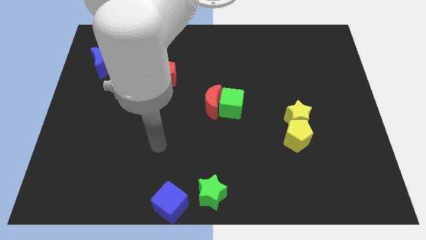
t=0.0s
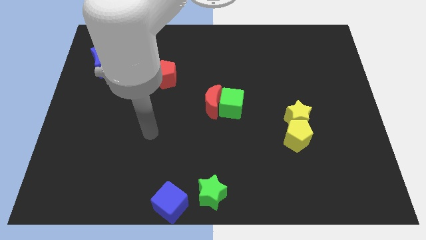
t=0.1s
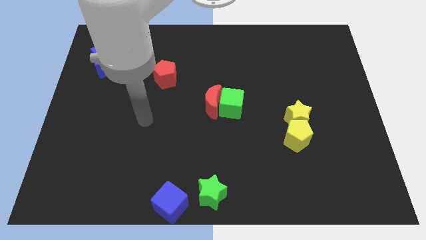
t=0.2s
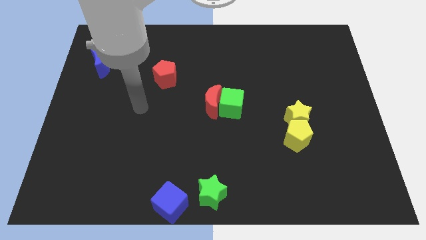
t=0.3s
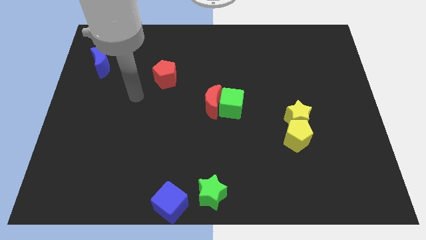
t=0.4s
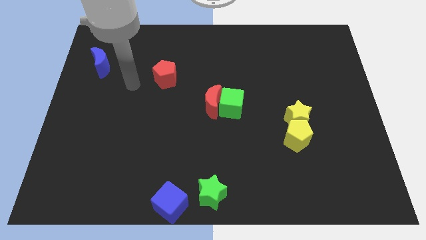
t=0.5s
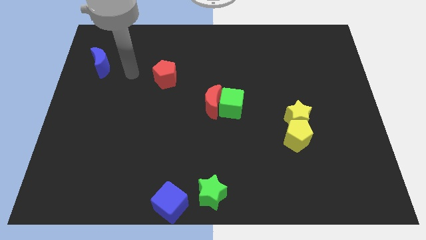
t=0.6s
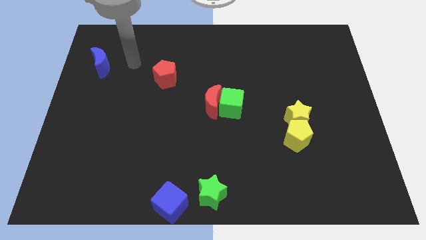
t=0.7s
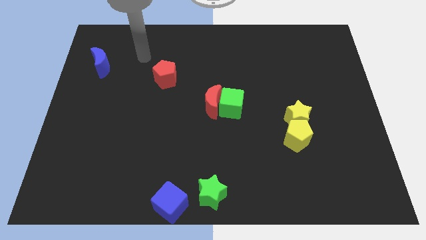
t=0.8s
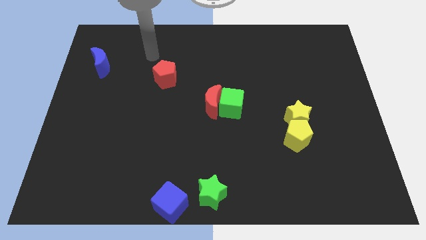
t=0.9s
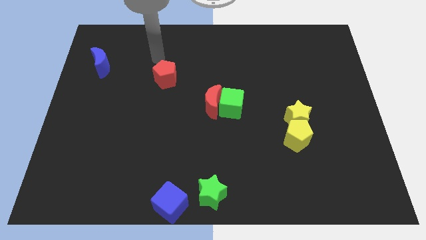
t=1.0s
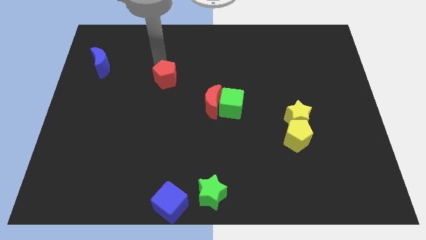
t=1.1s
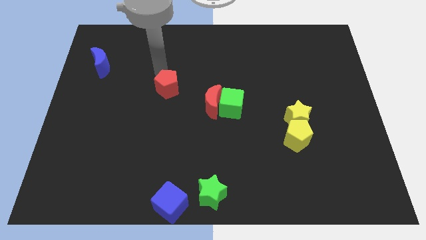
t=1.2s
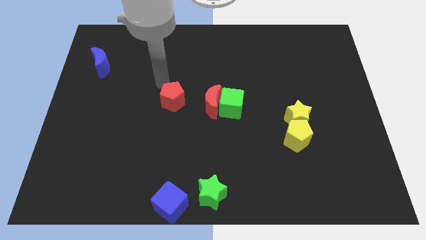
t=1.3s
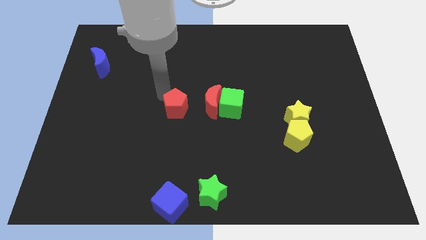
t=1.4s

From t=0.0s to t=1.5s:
move the red pentagon to the left of the red moon

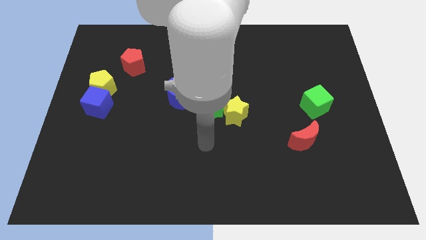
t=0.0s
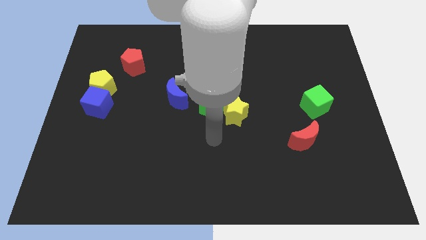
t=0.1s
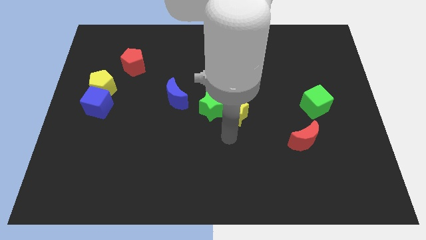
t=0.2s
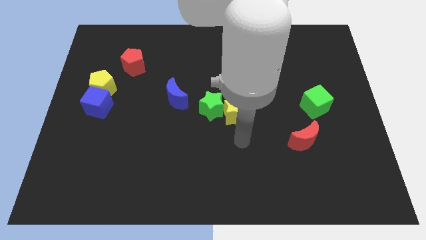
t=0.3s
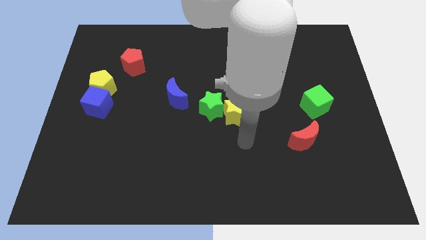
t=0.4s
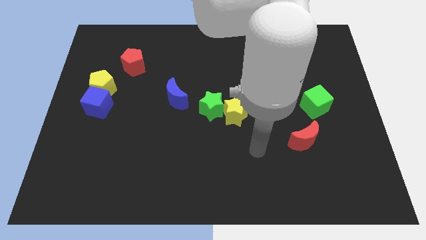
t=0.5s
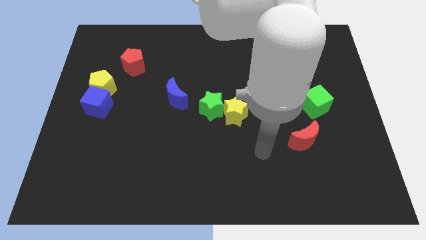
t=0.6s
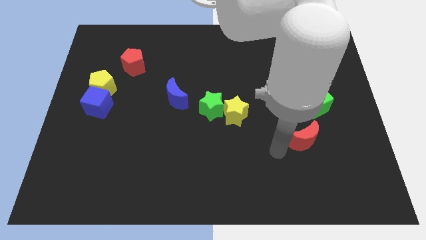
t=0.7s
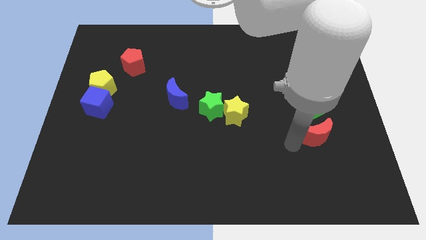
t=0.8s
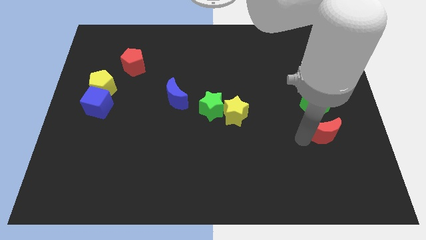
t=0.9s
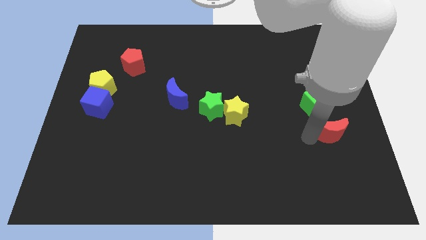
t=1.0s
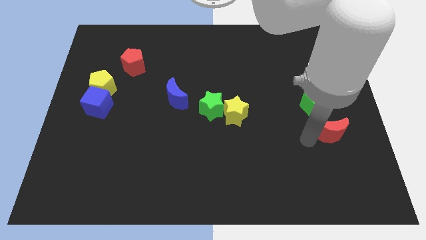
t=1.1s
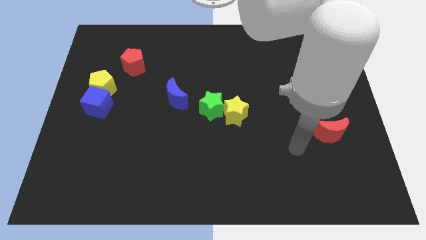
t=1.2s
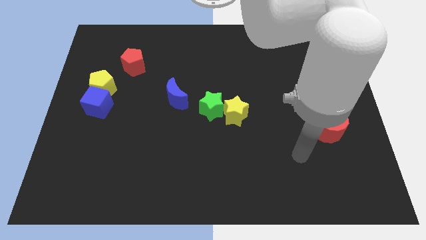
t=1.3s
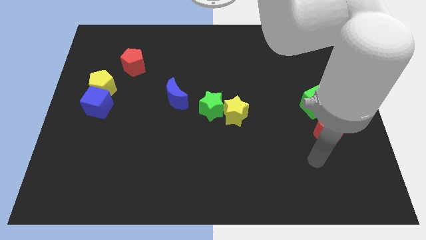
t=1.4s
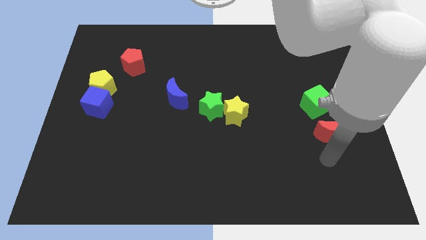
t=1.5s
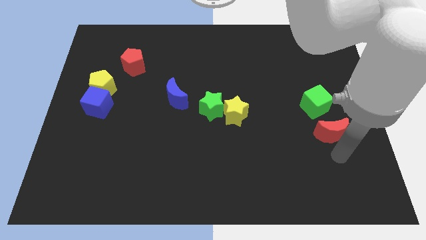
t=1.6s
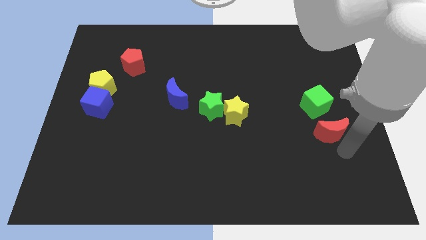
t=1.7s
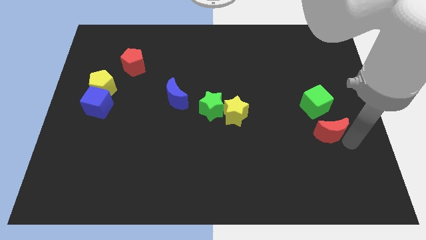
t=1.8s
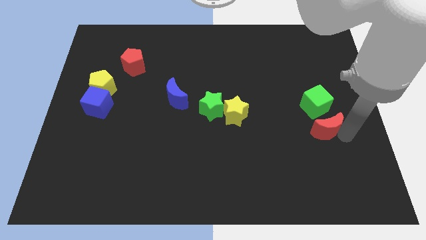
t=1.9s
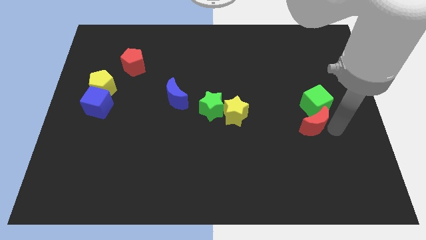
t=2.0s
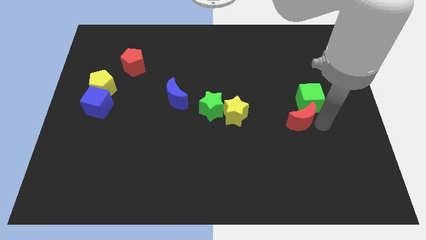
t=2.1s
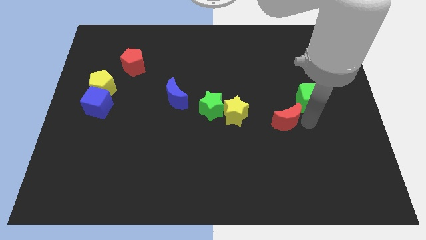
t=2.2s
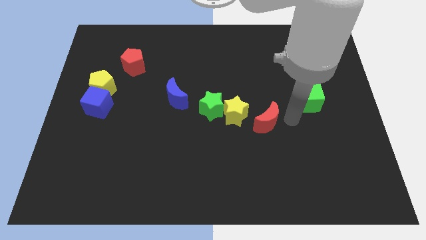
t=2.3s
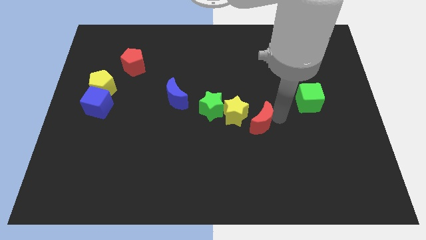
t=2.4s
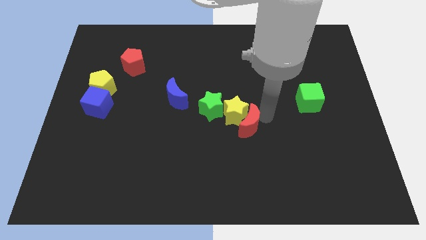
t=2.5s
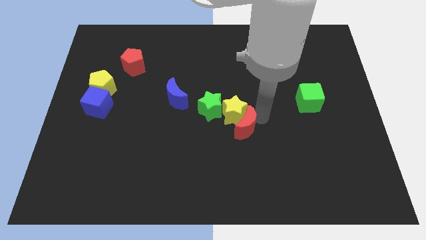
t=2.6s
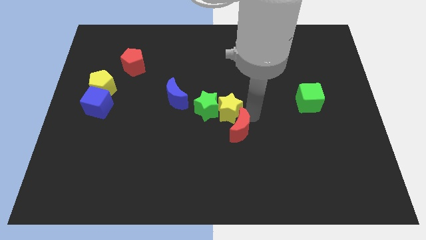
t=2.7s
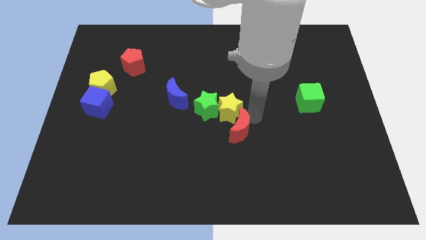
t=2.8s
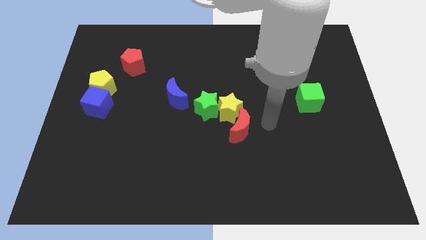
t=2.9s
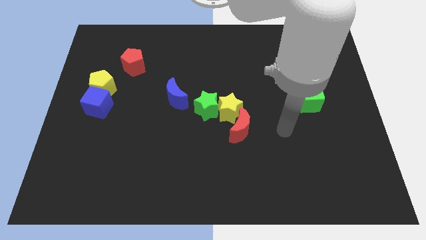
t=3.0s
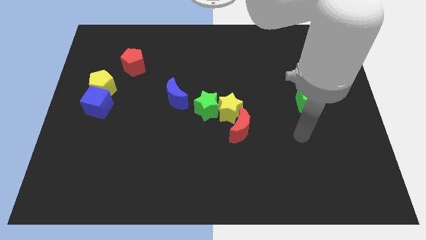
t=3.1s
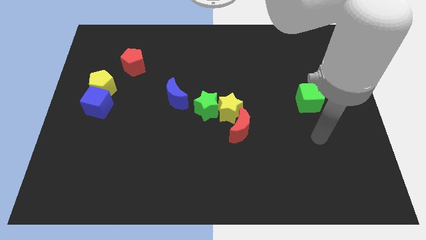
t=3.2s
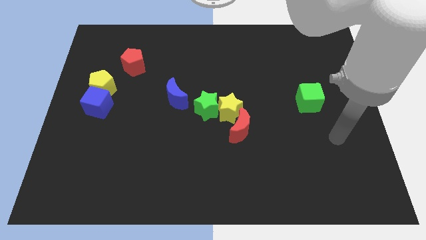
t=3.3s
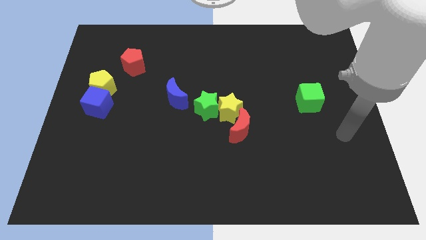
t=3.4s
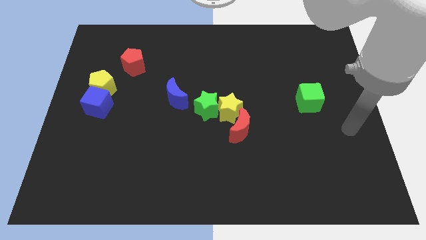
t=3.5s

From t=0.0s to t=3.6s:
move the red crescent to the right of the yellow star

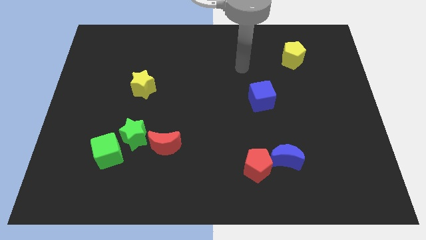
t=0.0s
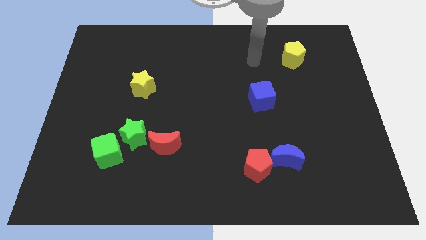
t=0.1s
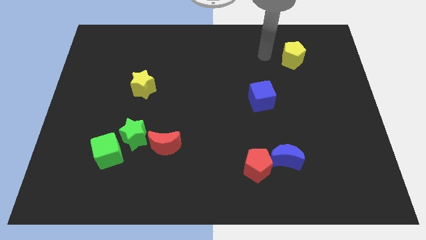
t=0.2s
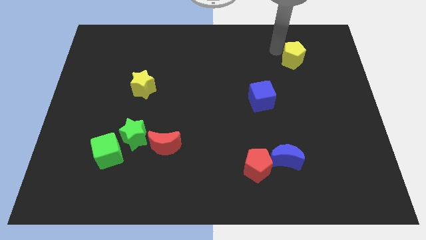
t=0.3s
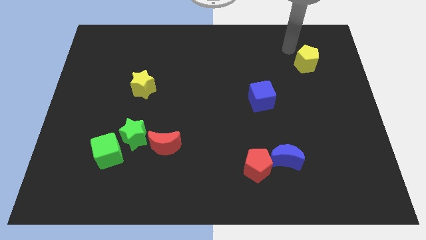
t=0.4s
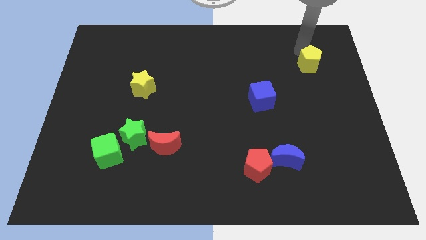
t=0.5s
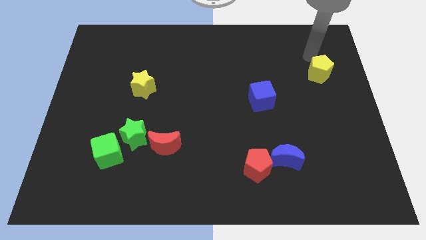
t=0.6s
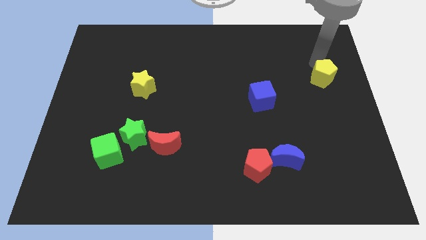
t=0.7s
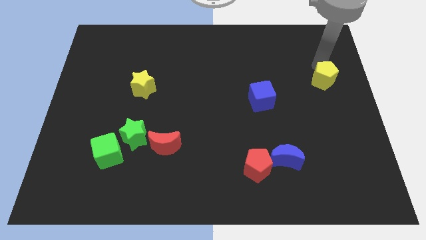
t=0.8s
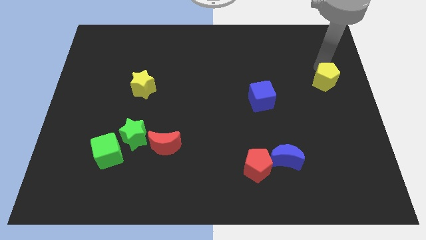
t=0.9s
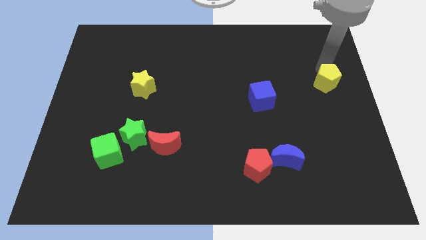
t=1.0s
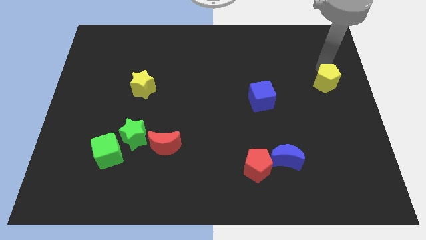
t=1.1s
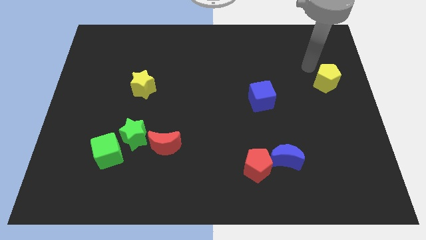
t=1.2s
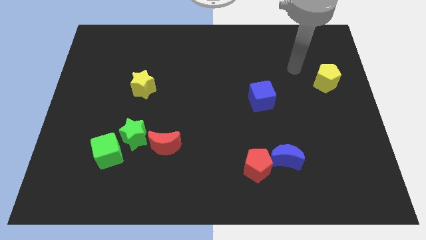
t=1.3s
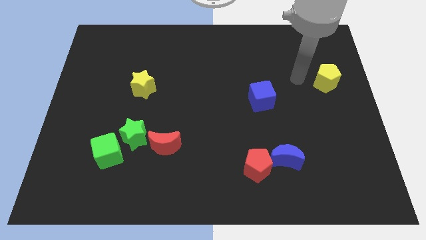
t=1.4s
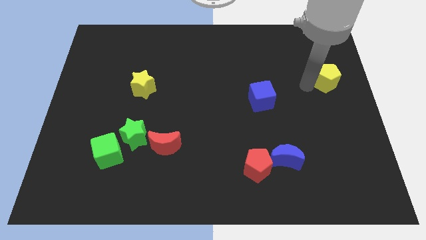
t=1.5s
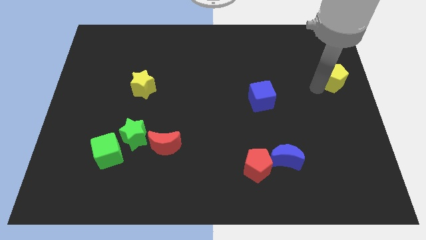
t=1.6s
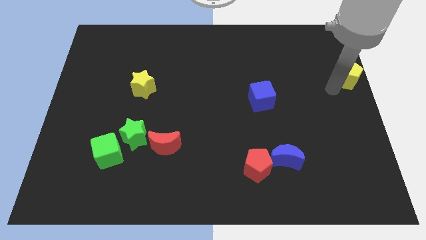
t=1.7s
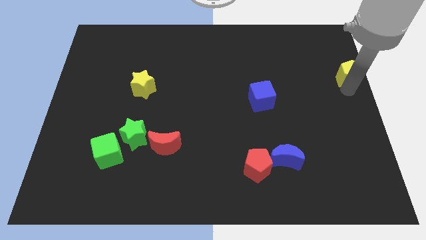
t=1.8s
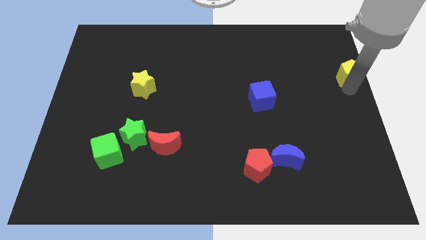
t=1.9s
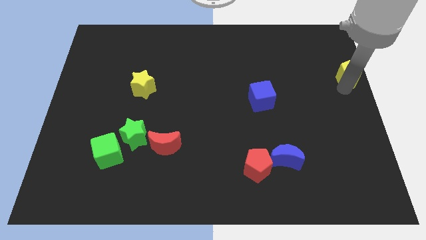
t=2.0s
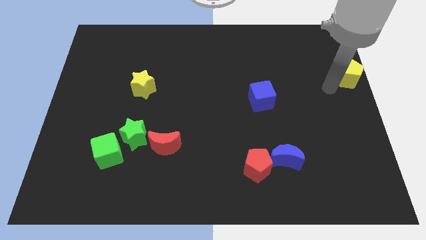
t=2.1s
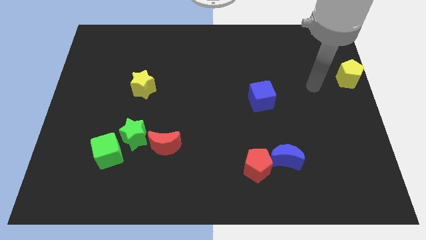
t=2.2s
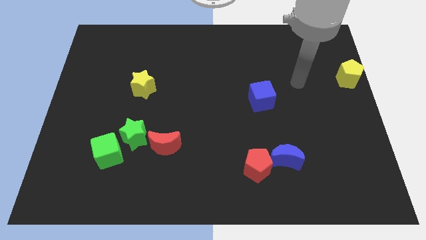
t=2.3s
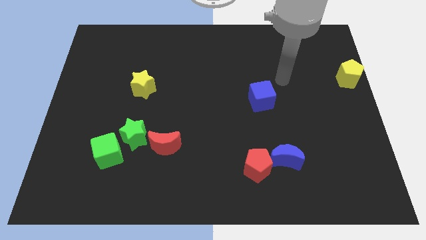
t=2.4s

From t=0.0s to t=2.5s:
move yellow pentagon at center right

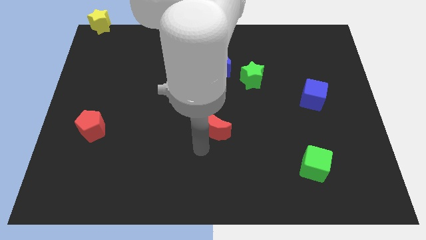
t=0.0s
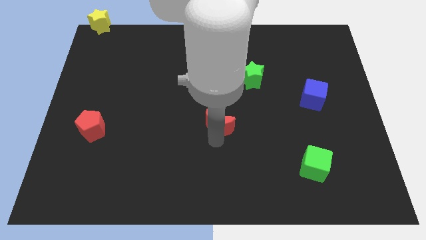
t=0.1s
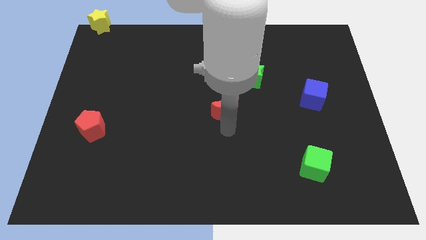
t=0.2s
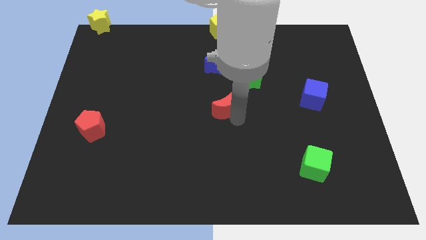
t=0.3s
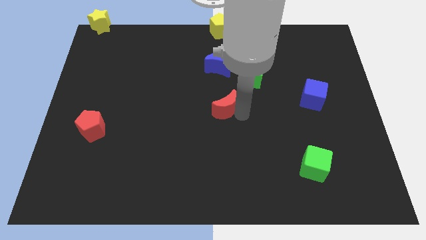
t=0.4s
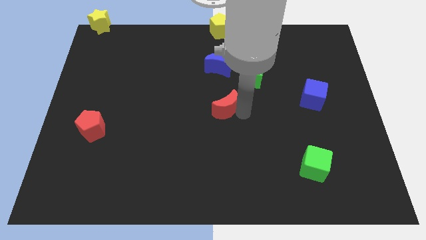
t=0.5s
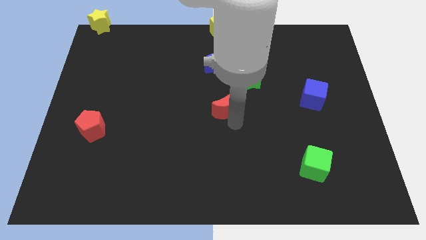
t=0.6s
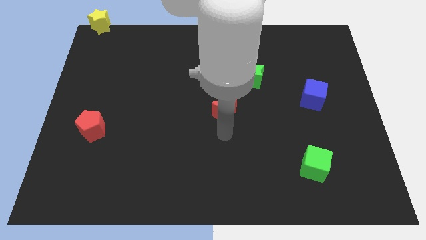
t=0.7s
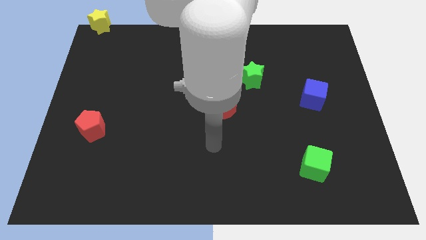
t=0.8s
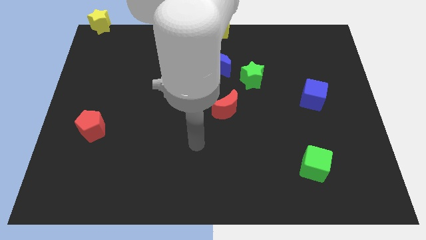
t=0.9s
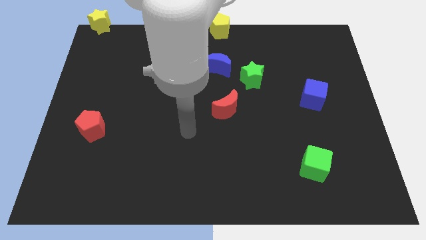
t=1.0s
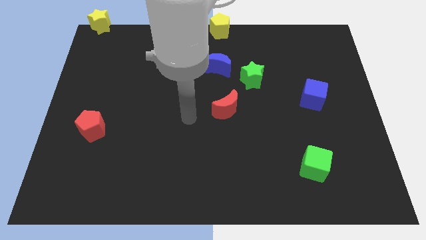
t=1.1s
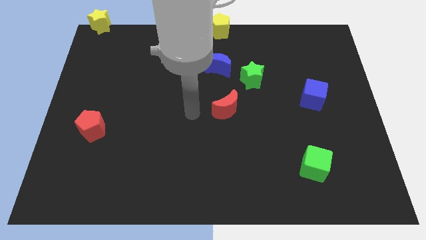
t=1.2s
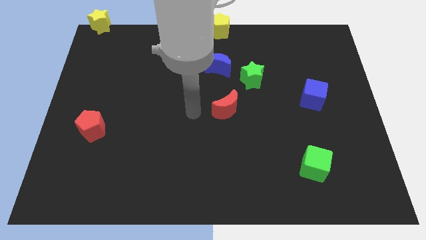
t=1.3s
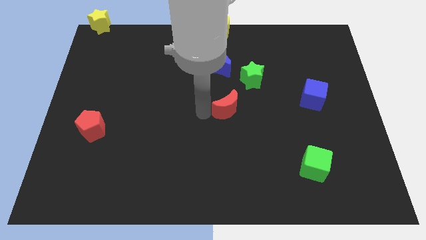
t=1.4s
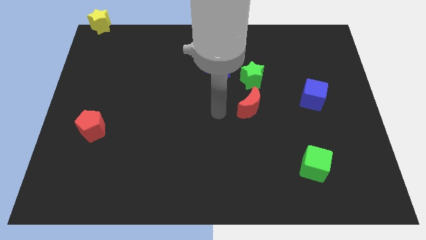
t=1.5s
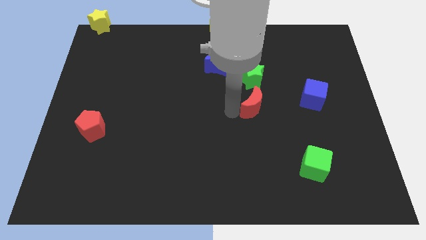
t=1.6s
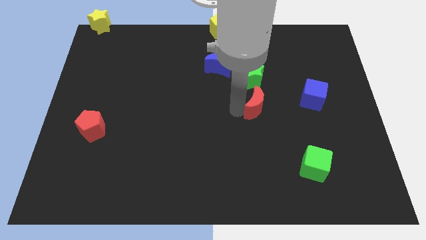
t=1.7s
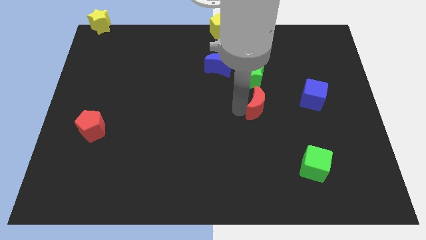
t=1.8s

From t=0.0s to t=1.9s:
slide the red crescent to the bottom side of the green star
